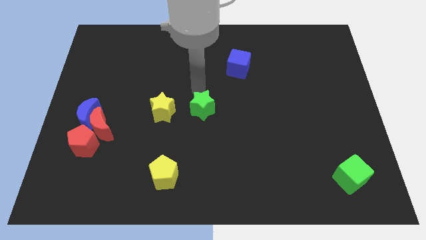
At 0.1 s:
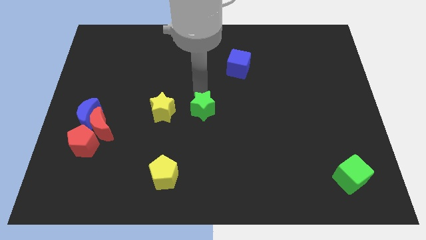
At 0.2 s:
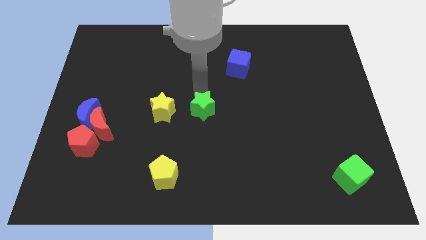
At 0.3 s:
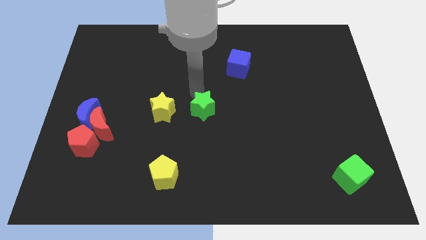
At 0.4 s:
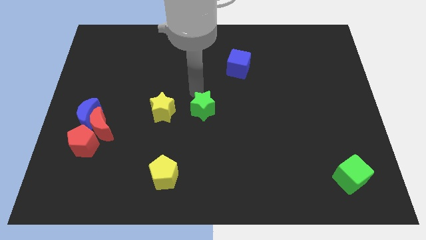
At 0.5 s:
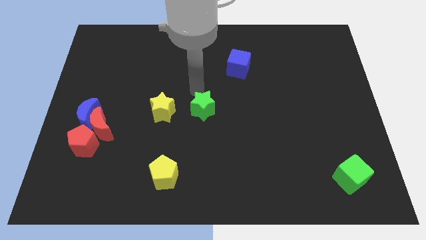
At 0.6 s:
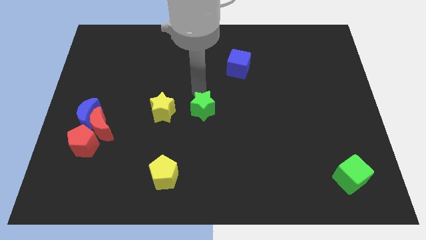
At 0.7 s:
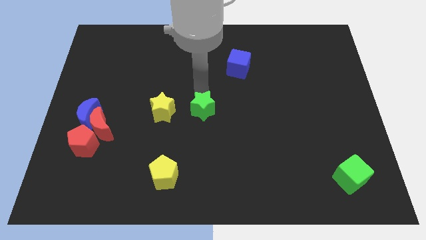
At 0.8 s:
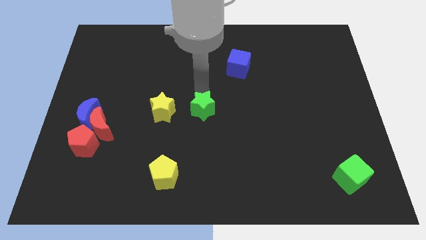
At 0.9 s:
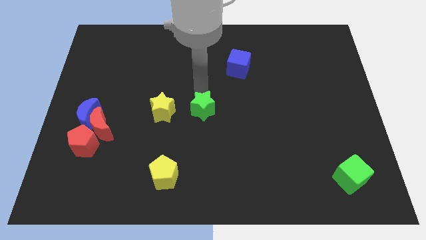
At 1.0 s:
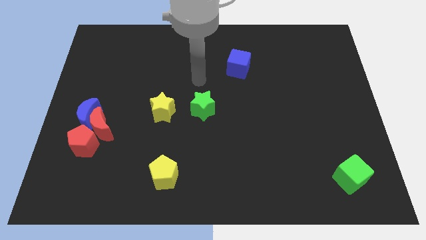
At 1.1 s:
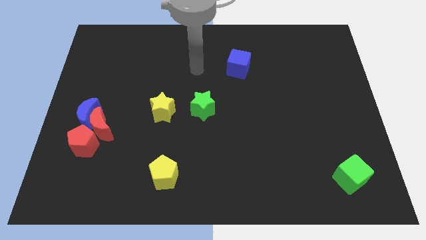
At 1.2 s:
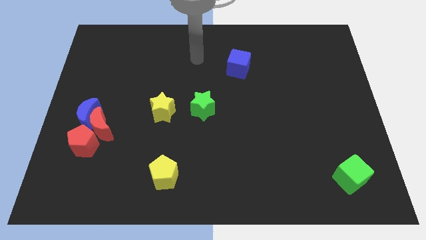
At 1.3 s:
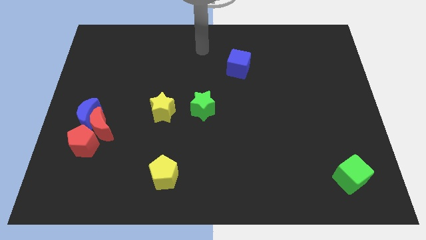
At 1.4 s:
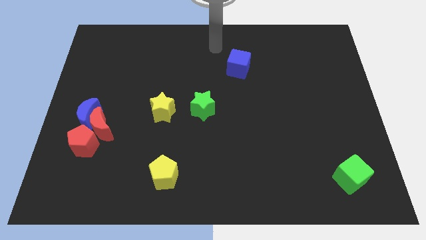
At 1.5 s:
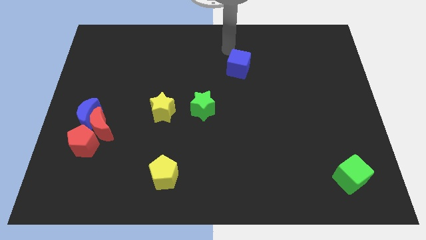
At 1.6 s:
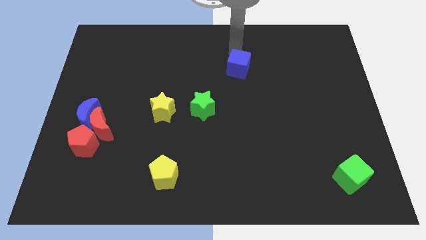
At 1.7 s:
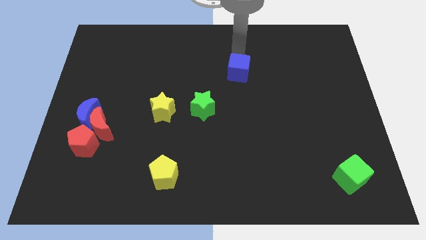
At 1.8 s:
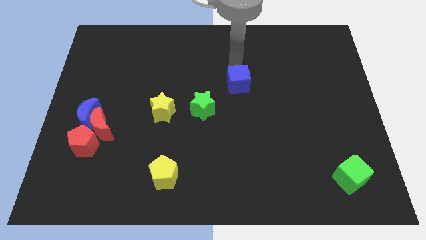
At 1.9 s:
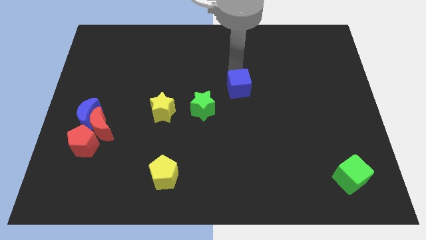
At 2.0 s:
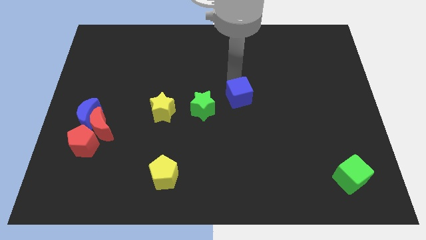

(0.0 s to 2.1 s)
move the blue cube slightly down

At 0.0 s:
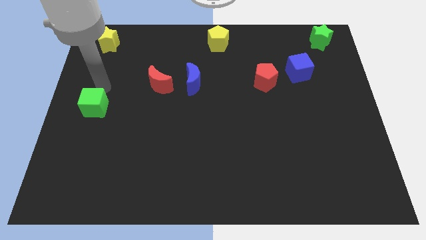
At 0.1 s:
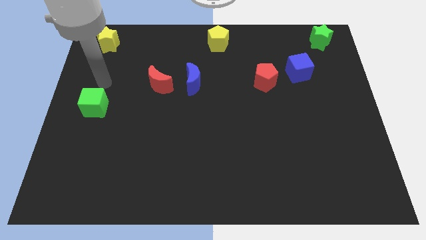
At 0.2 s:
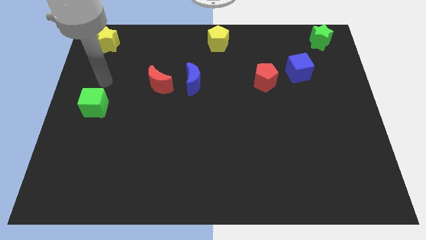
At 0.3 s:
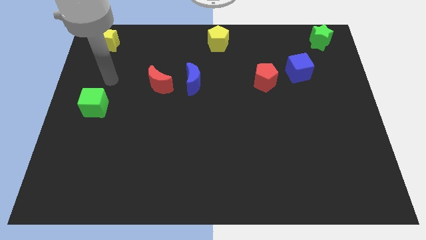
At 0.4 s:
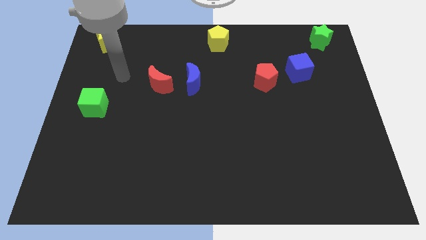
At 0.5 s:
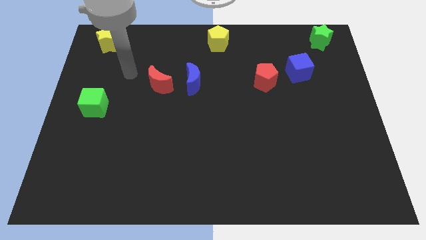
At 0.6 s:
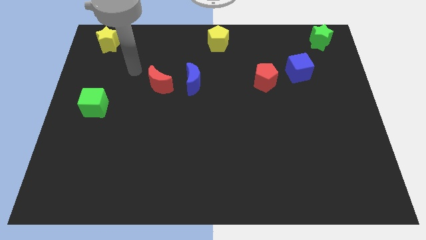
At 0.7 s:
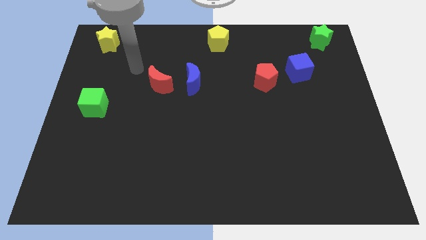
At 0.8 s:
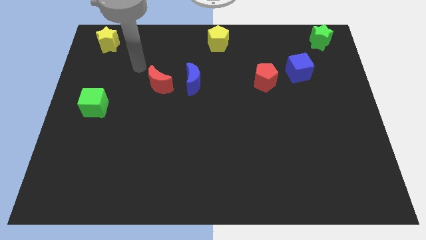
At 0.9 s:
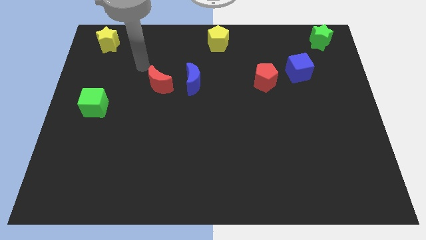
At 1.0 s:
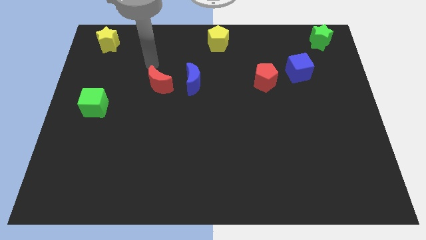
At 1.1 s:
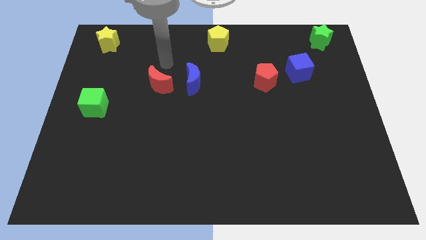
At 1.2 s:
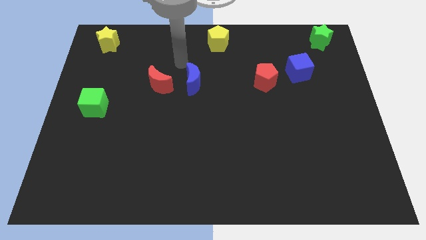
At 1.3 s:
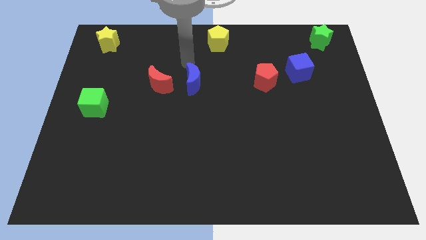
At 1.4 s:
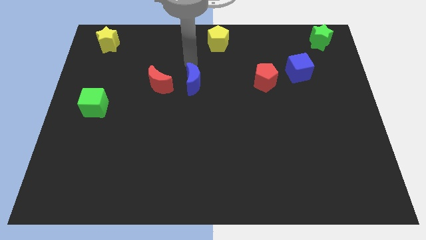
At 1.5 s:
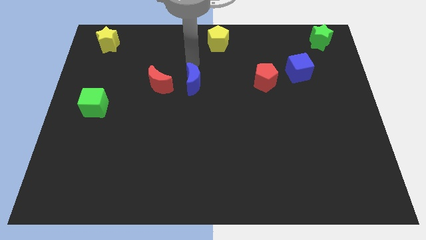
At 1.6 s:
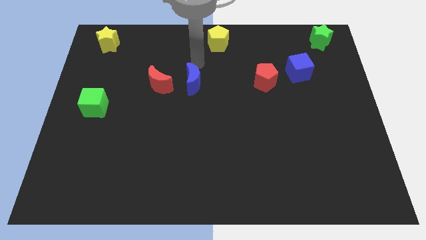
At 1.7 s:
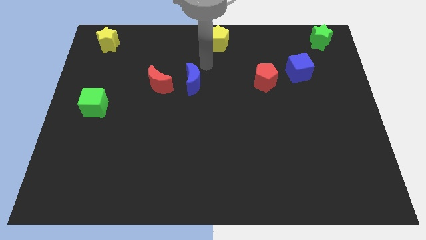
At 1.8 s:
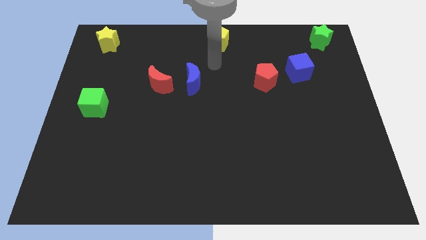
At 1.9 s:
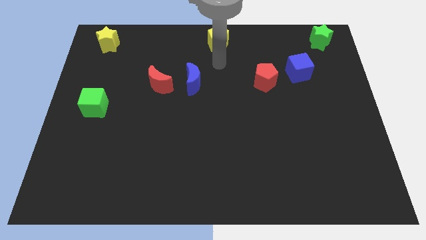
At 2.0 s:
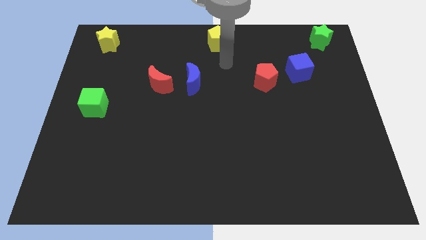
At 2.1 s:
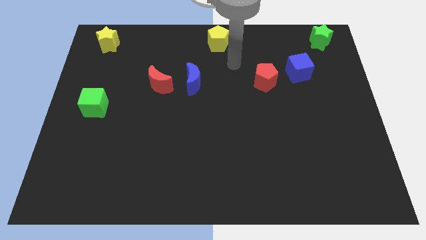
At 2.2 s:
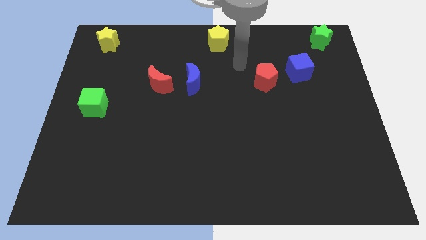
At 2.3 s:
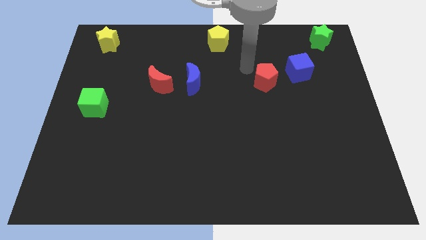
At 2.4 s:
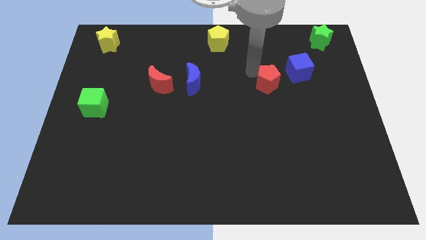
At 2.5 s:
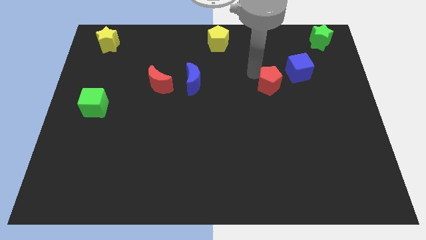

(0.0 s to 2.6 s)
push the red pentagon slightly to the bottom

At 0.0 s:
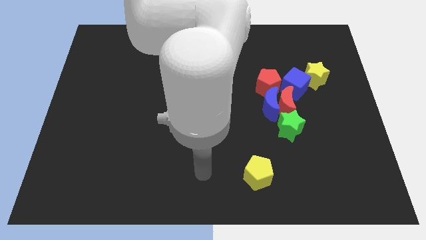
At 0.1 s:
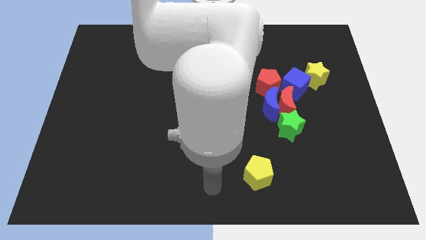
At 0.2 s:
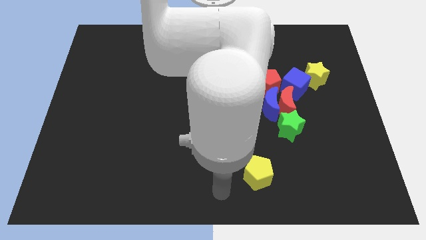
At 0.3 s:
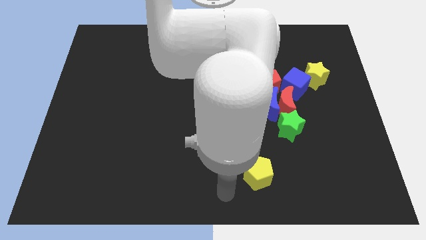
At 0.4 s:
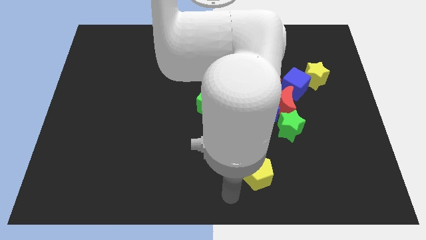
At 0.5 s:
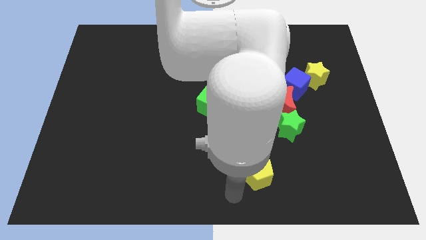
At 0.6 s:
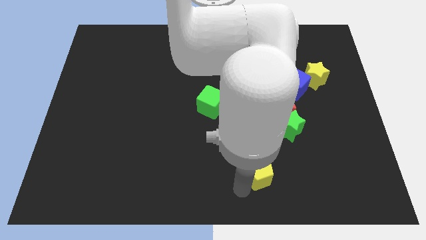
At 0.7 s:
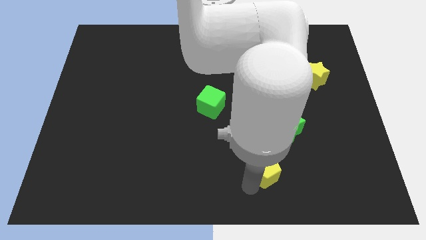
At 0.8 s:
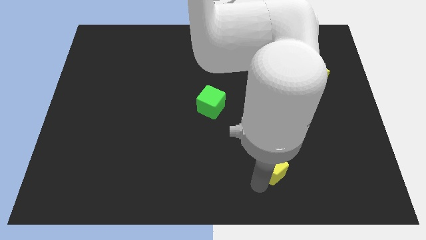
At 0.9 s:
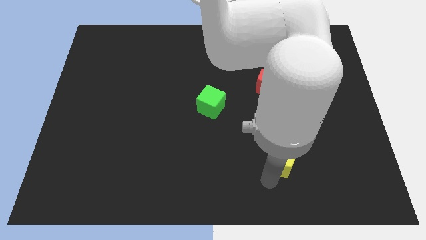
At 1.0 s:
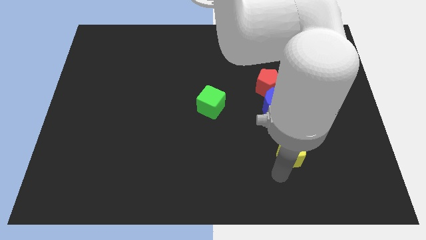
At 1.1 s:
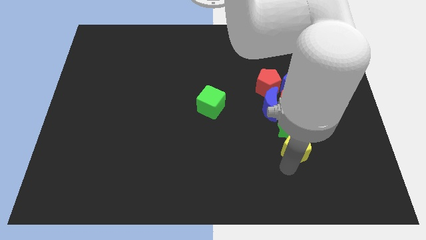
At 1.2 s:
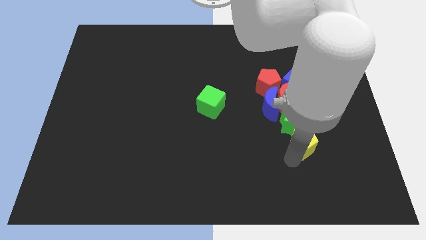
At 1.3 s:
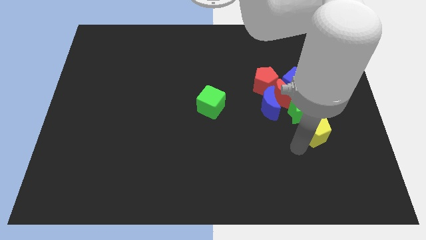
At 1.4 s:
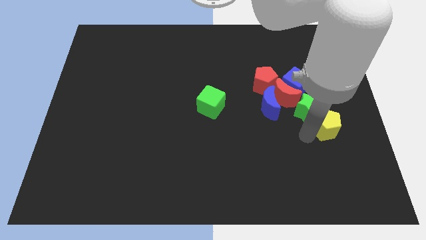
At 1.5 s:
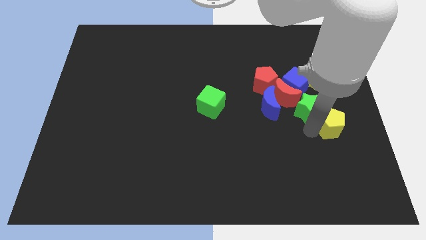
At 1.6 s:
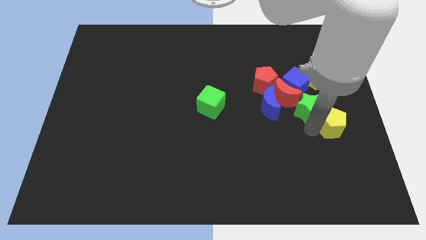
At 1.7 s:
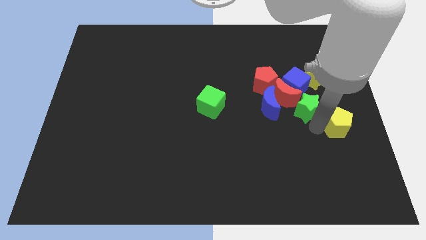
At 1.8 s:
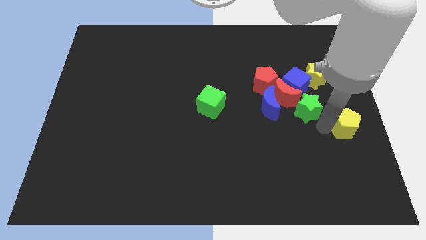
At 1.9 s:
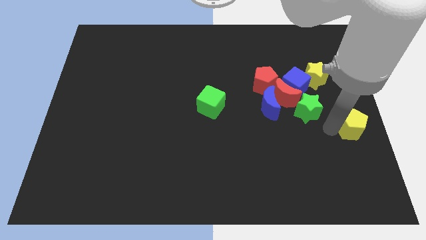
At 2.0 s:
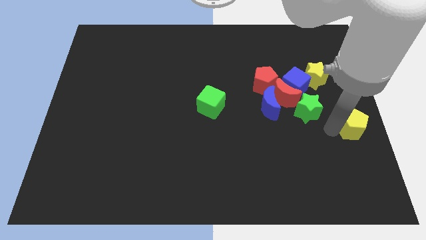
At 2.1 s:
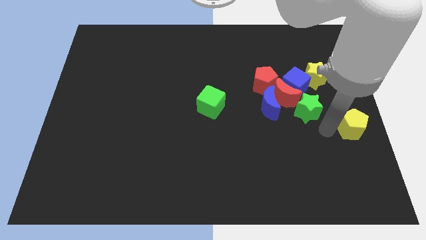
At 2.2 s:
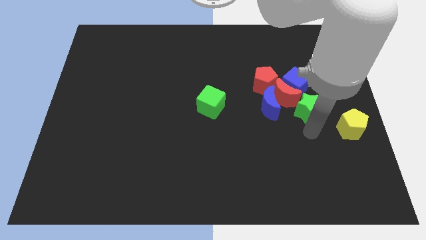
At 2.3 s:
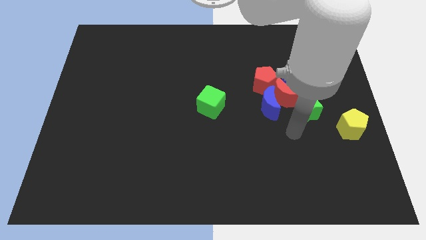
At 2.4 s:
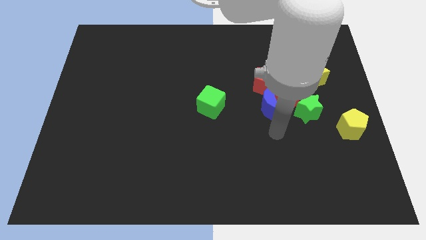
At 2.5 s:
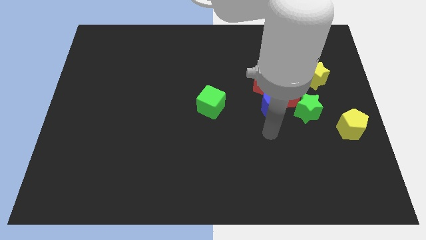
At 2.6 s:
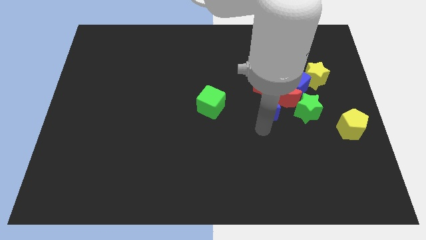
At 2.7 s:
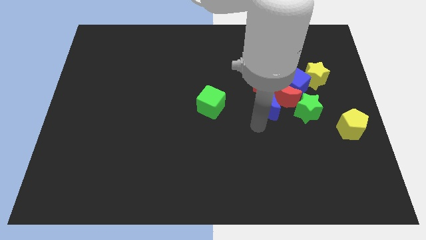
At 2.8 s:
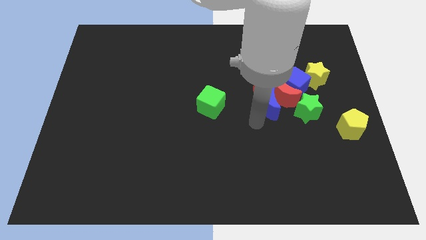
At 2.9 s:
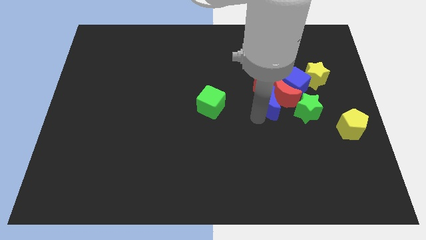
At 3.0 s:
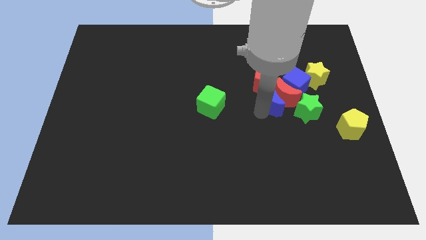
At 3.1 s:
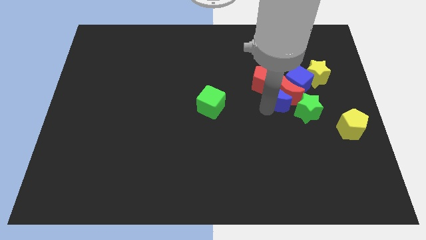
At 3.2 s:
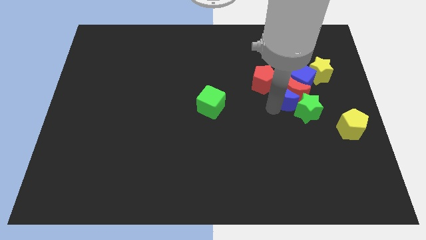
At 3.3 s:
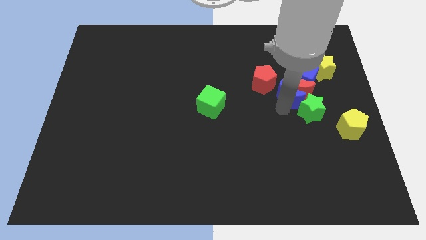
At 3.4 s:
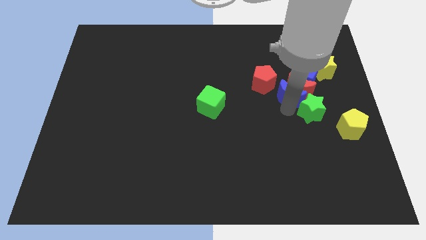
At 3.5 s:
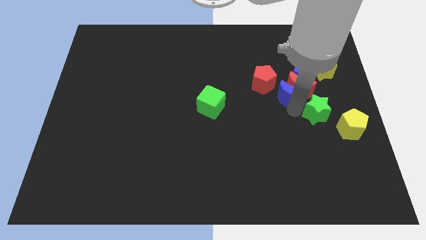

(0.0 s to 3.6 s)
arrange the blue moon green star and yellow pentagon to form a diagonal line of blocks

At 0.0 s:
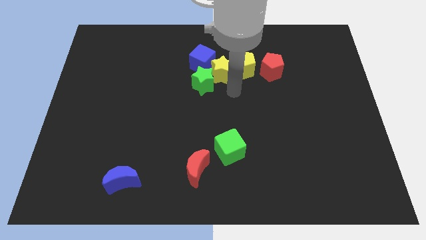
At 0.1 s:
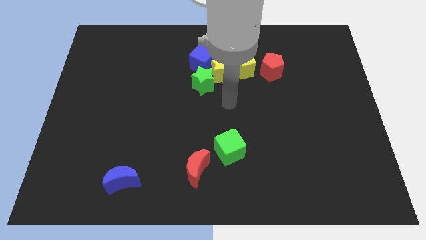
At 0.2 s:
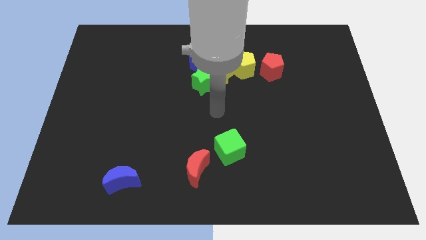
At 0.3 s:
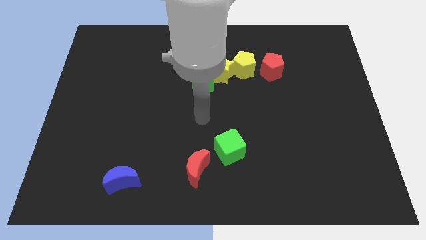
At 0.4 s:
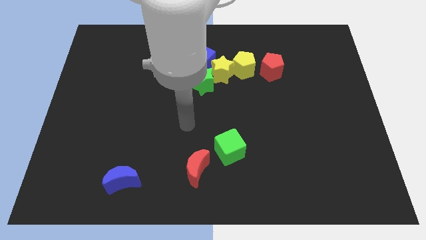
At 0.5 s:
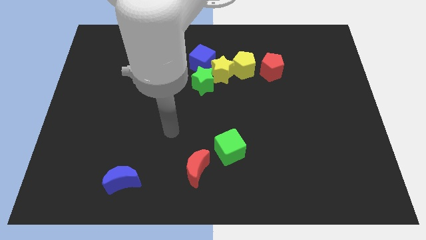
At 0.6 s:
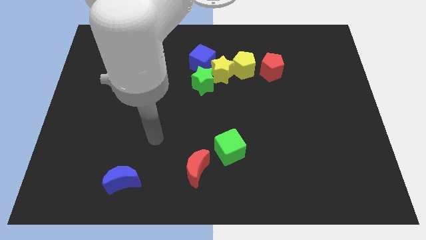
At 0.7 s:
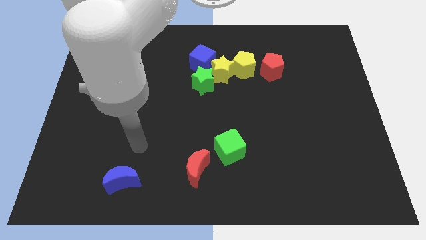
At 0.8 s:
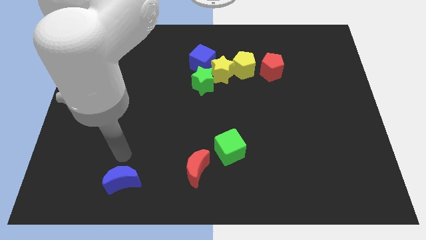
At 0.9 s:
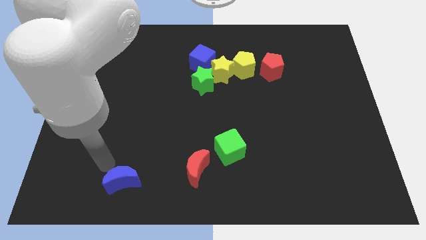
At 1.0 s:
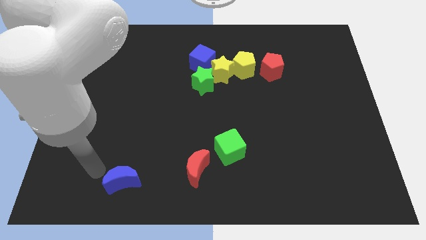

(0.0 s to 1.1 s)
place your hand at the top side of the blue crescent
